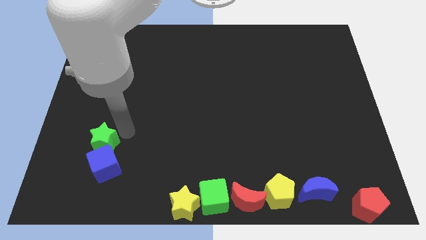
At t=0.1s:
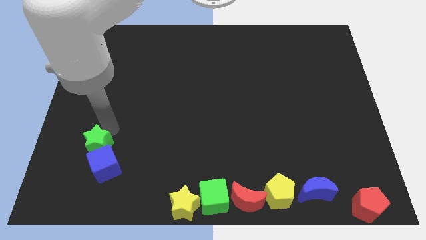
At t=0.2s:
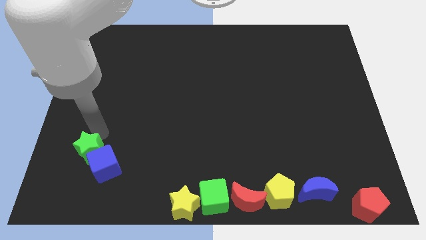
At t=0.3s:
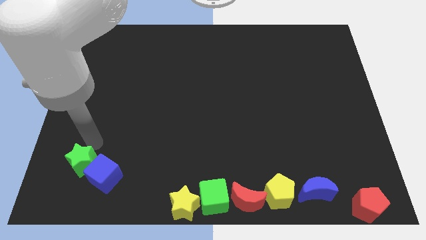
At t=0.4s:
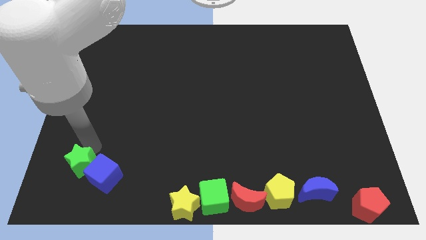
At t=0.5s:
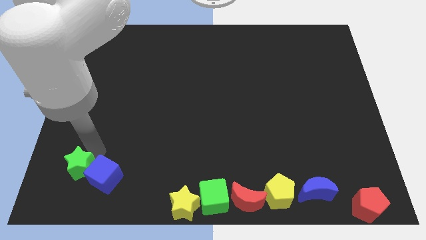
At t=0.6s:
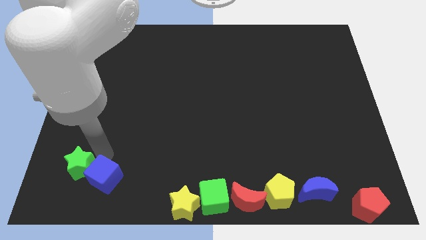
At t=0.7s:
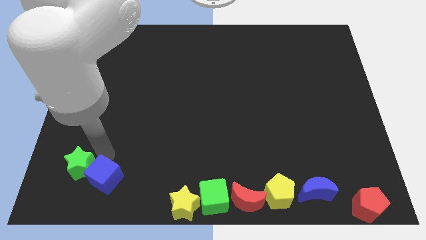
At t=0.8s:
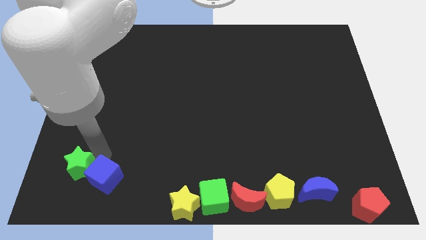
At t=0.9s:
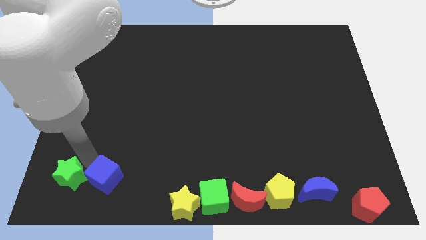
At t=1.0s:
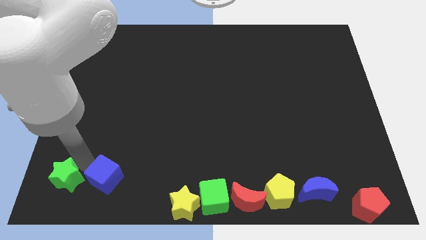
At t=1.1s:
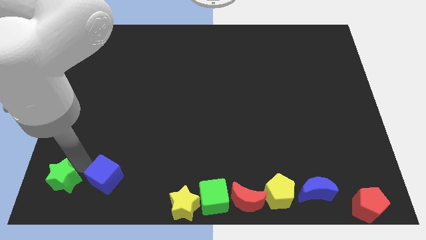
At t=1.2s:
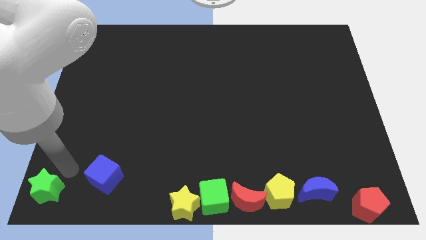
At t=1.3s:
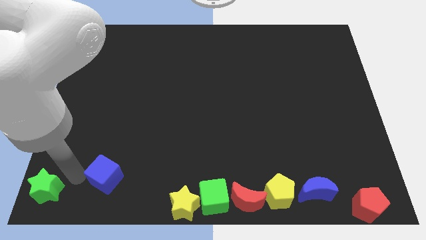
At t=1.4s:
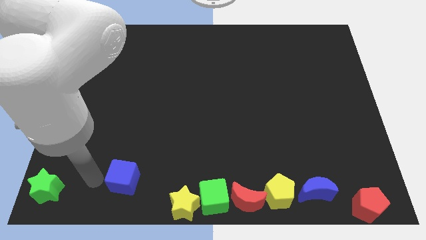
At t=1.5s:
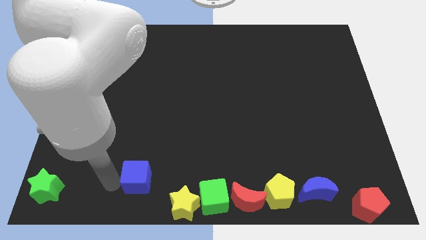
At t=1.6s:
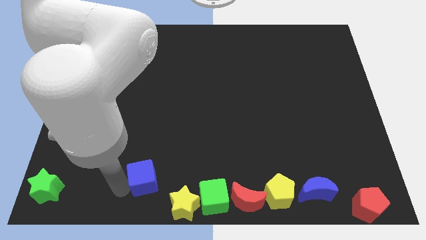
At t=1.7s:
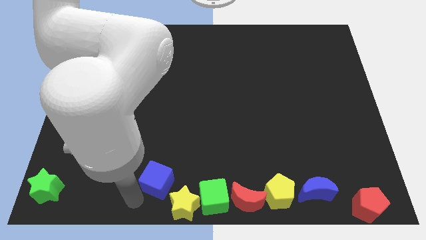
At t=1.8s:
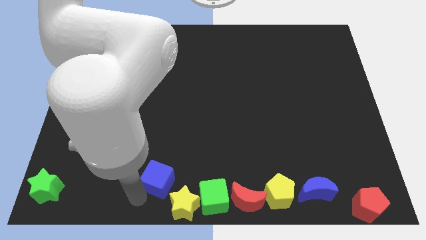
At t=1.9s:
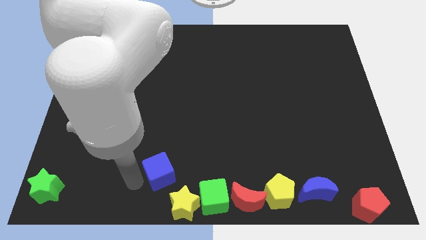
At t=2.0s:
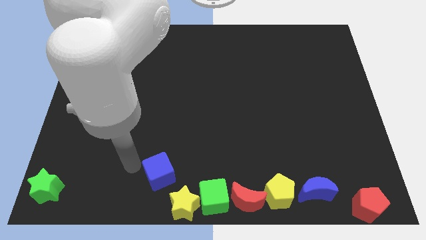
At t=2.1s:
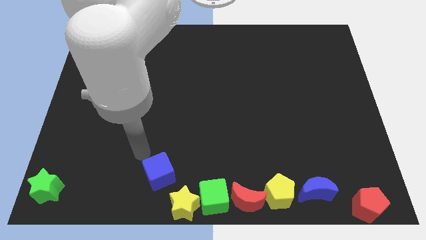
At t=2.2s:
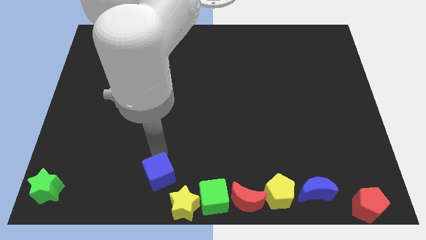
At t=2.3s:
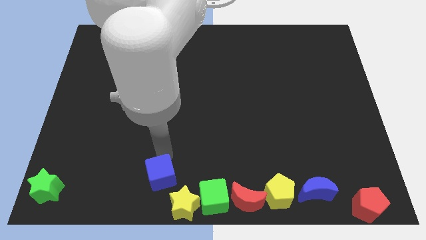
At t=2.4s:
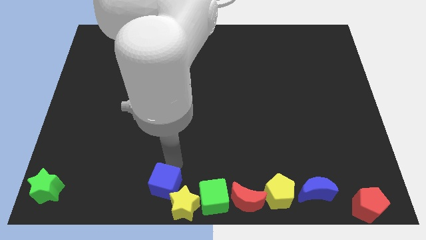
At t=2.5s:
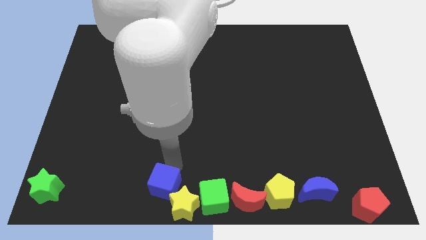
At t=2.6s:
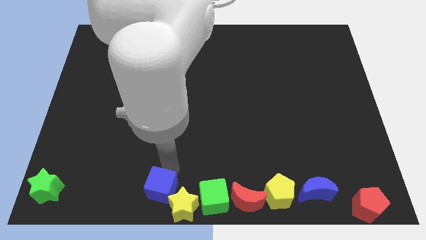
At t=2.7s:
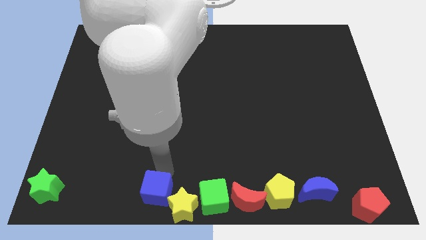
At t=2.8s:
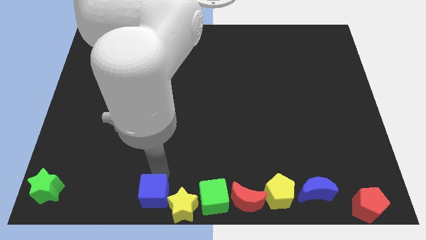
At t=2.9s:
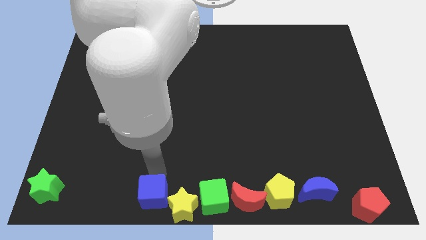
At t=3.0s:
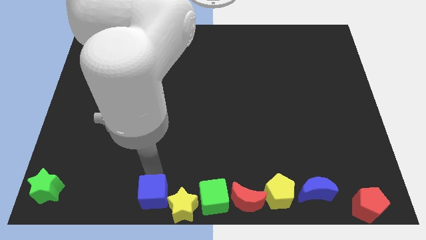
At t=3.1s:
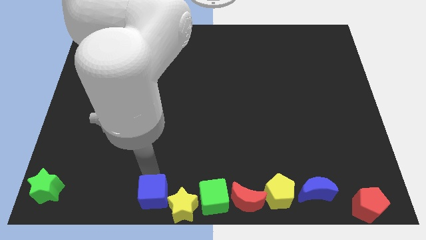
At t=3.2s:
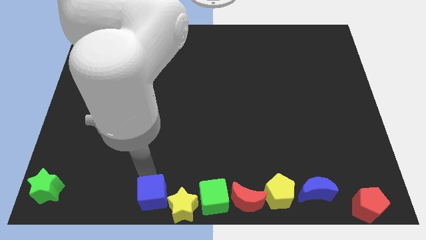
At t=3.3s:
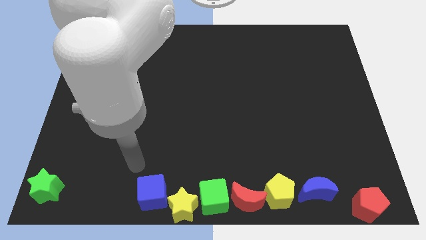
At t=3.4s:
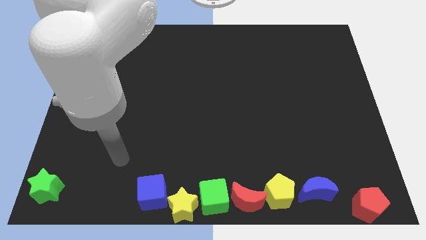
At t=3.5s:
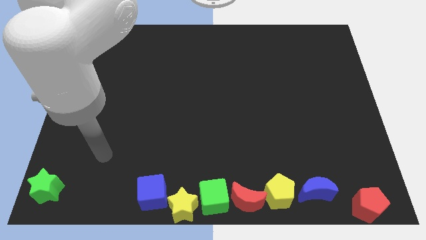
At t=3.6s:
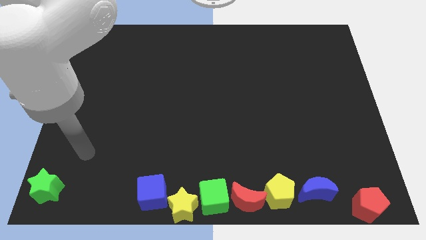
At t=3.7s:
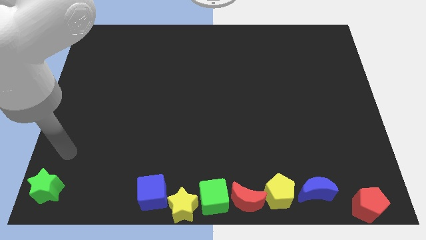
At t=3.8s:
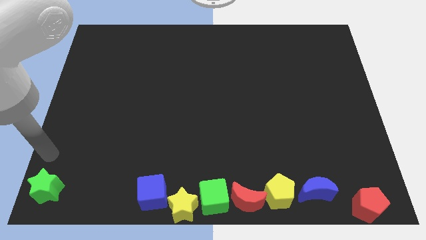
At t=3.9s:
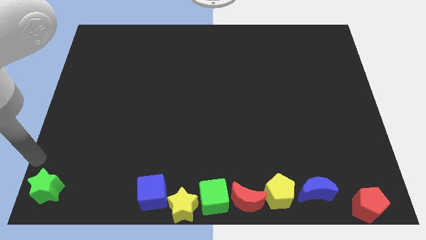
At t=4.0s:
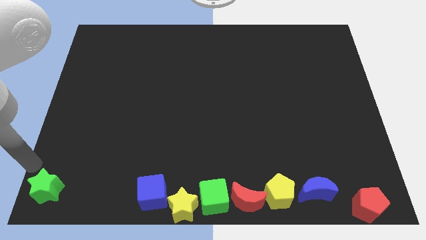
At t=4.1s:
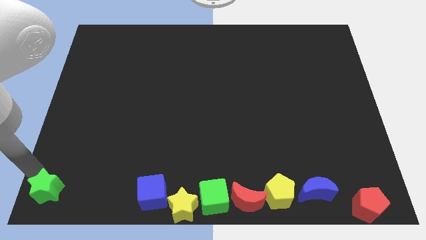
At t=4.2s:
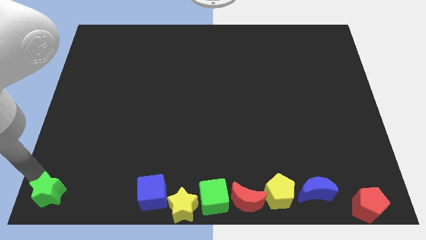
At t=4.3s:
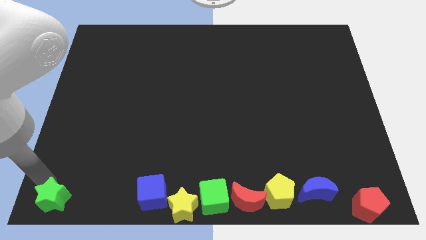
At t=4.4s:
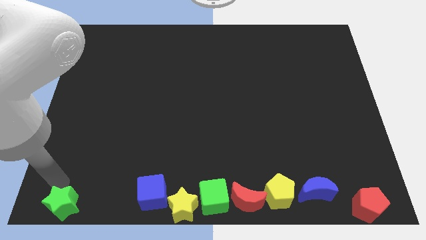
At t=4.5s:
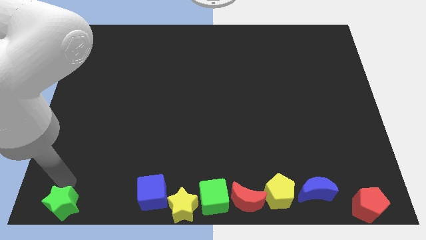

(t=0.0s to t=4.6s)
separate green star and the blue cube by placing the blue cube to the left of the yellow star

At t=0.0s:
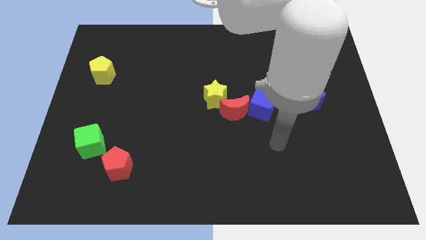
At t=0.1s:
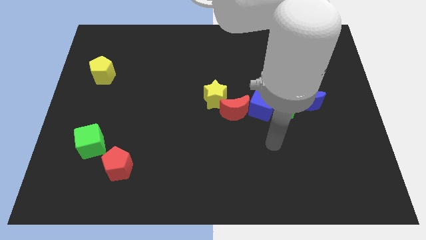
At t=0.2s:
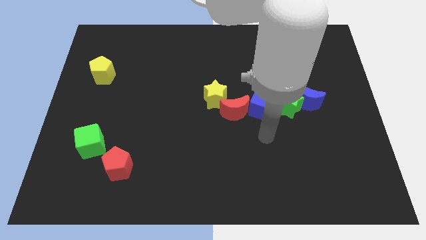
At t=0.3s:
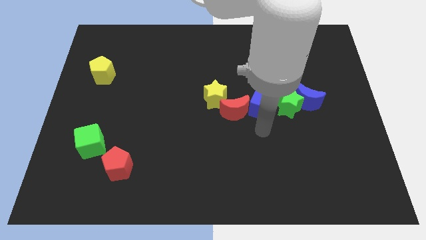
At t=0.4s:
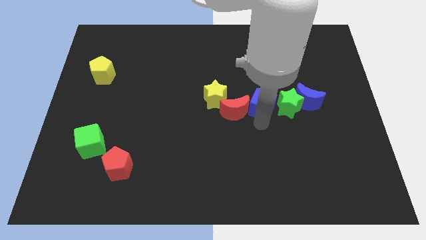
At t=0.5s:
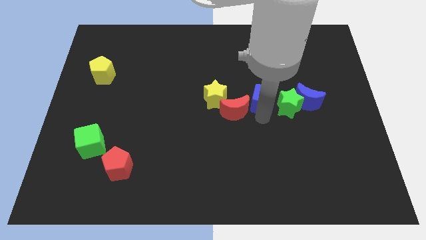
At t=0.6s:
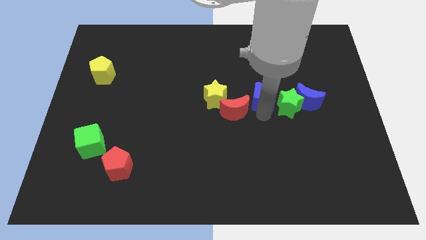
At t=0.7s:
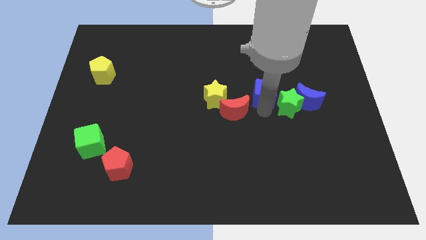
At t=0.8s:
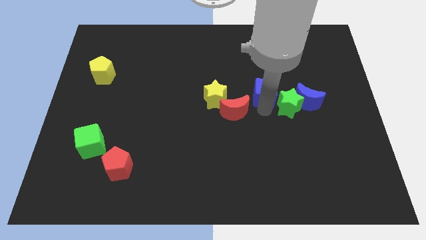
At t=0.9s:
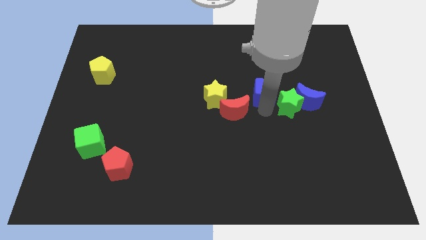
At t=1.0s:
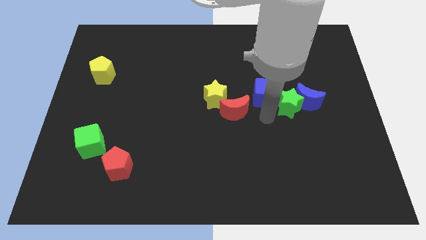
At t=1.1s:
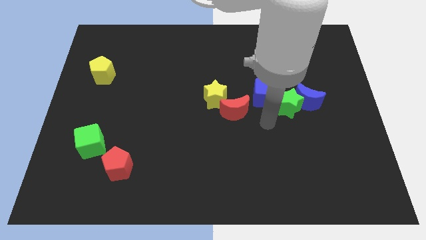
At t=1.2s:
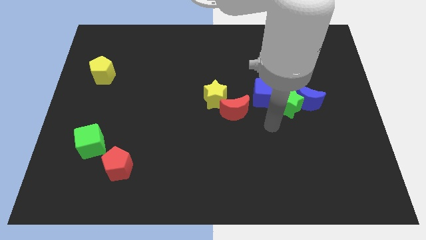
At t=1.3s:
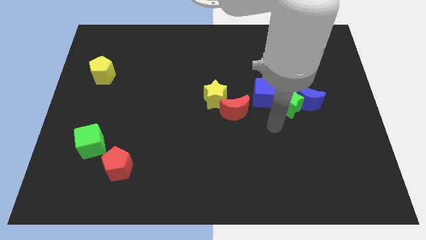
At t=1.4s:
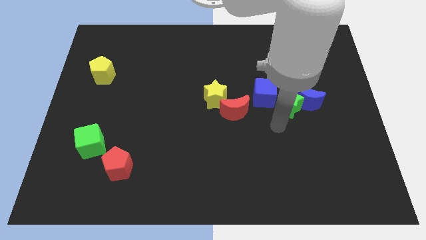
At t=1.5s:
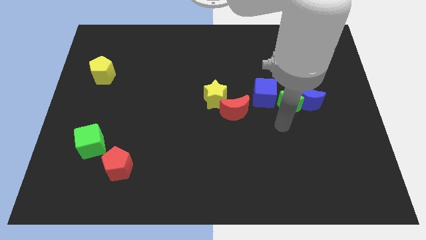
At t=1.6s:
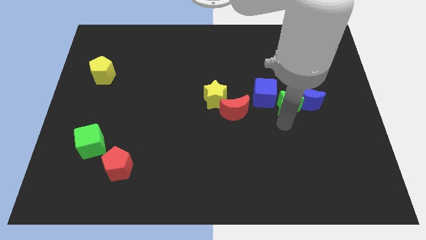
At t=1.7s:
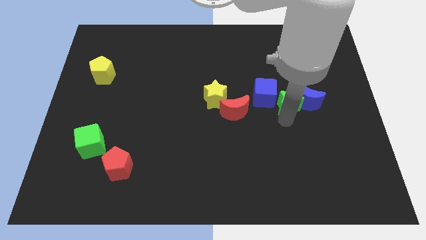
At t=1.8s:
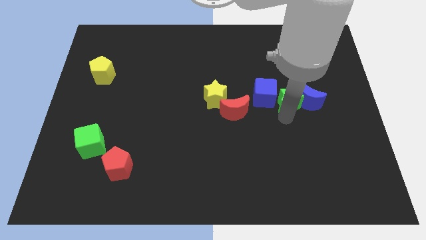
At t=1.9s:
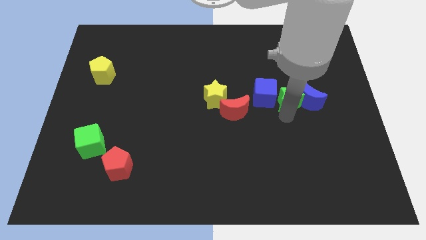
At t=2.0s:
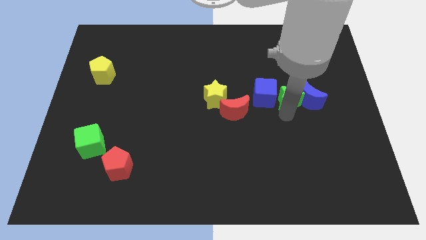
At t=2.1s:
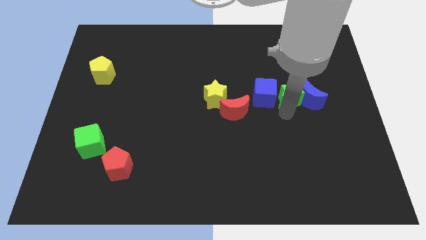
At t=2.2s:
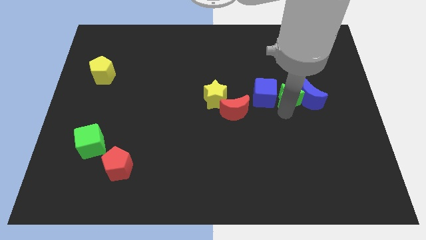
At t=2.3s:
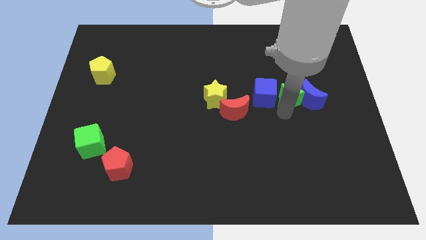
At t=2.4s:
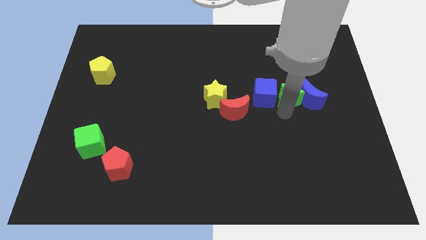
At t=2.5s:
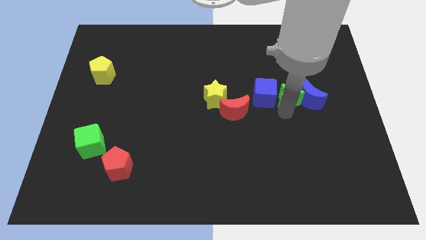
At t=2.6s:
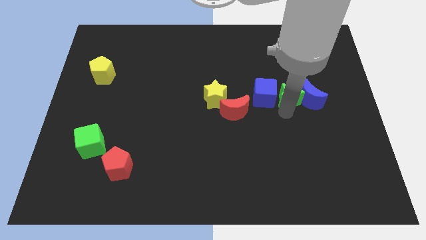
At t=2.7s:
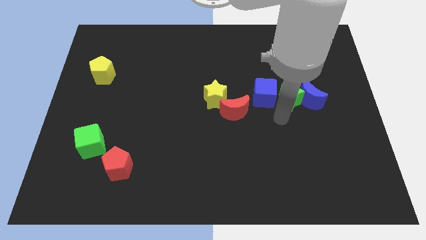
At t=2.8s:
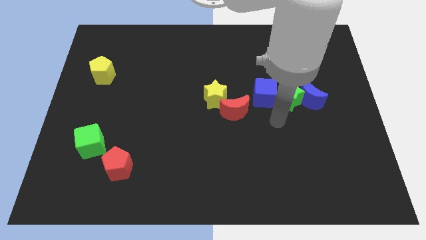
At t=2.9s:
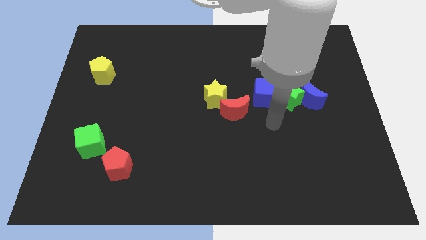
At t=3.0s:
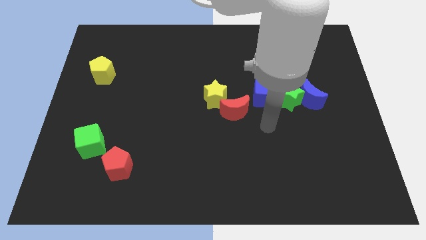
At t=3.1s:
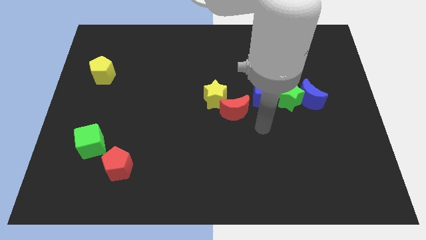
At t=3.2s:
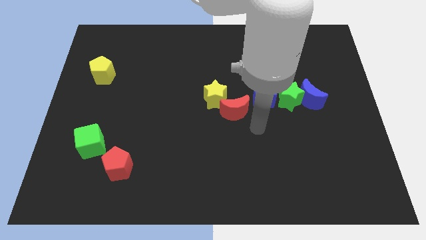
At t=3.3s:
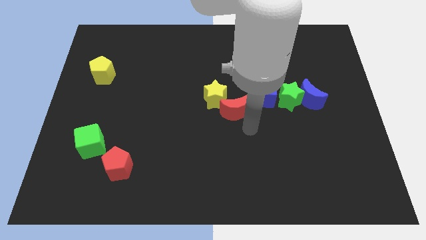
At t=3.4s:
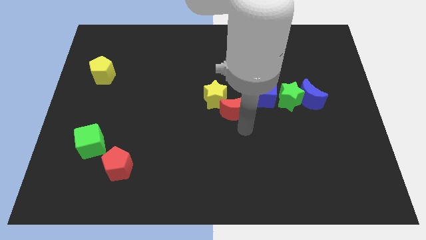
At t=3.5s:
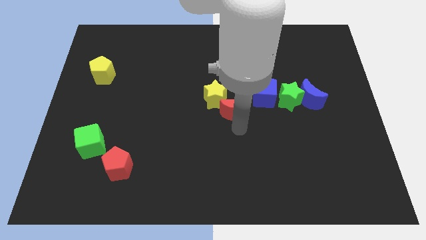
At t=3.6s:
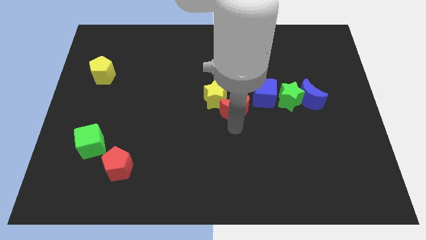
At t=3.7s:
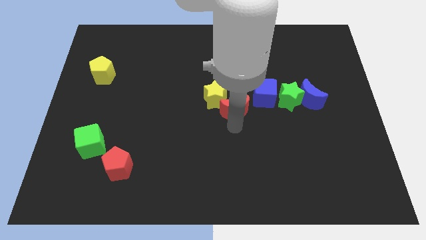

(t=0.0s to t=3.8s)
move the blue cube towards the top right to the red crescent

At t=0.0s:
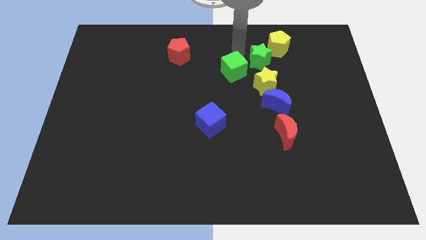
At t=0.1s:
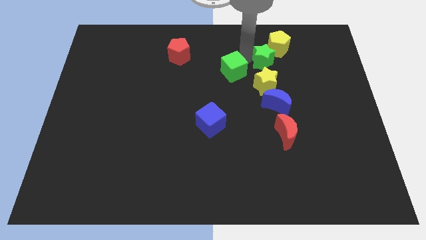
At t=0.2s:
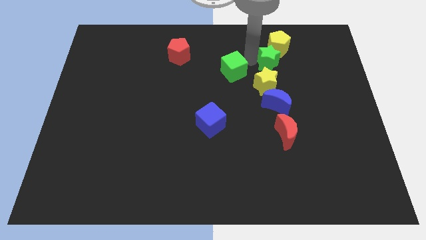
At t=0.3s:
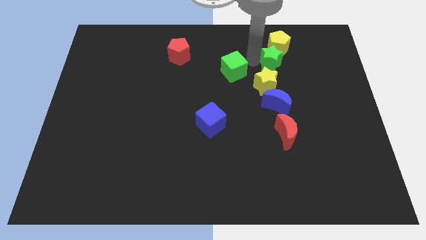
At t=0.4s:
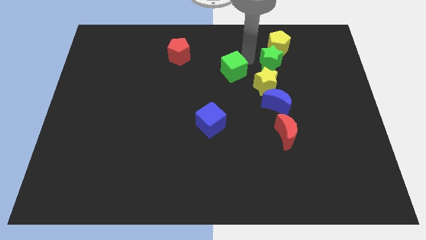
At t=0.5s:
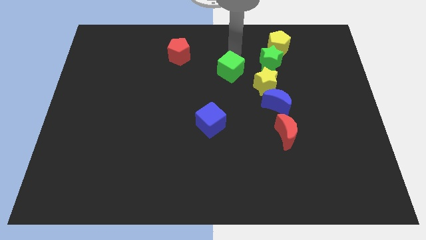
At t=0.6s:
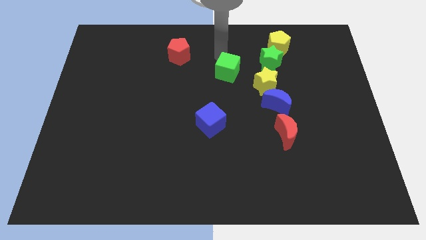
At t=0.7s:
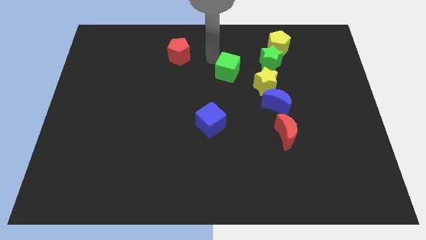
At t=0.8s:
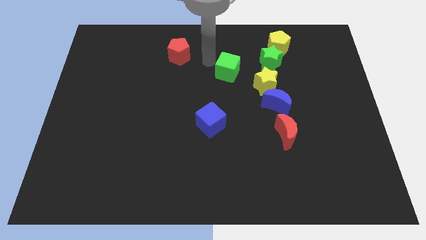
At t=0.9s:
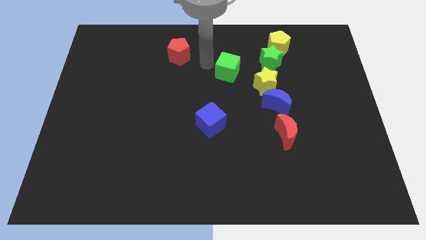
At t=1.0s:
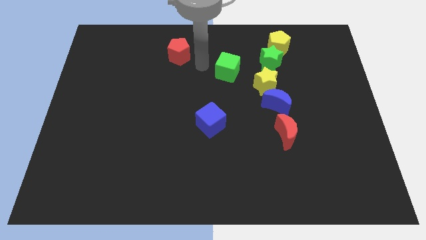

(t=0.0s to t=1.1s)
separate green blocks from each other
